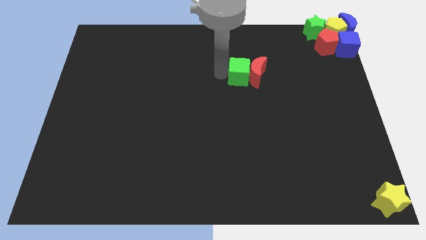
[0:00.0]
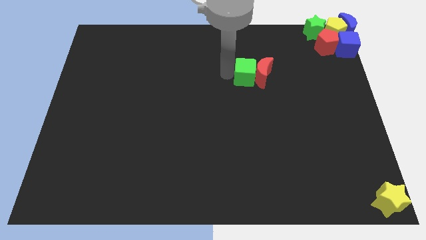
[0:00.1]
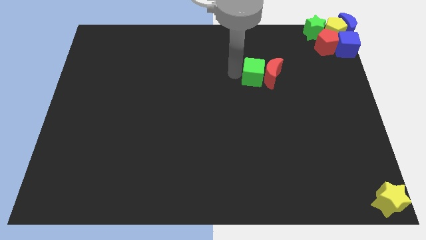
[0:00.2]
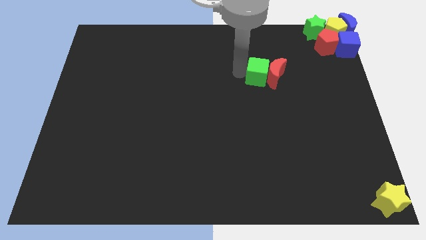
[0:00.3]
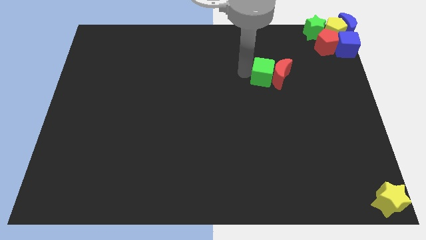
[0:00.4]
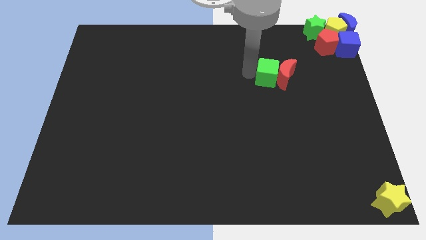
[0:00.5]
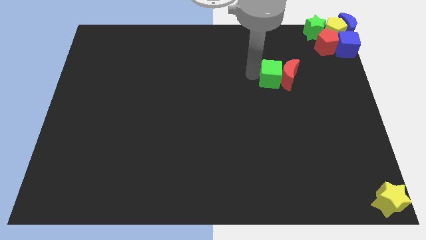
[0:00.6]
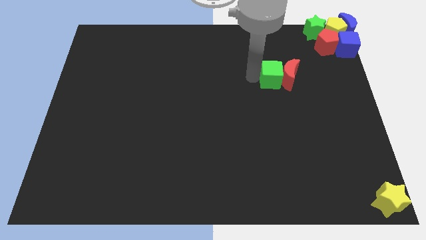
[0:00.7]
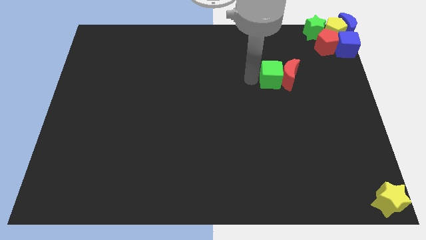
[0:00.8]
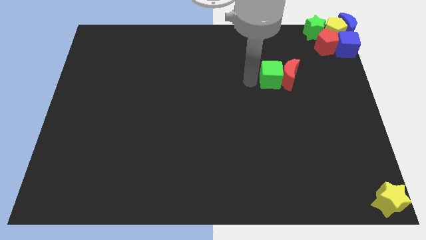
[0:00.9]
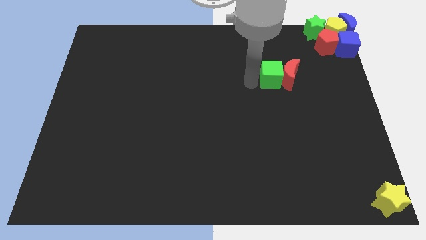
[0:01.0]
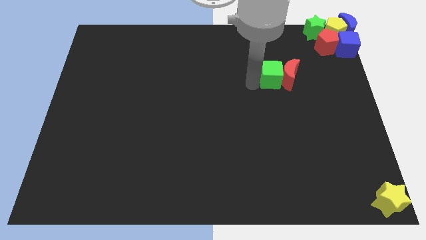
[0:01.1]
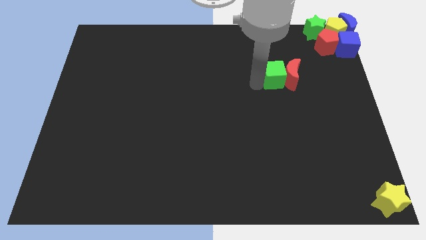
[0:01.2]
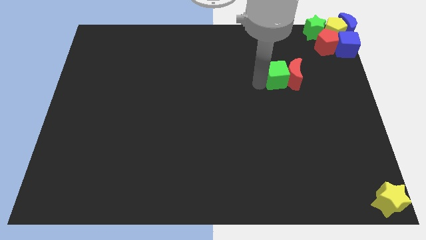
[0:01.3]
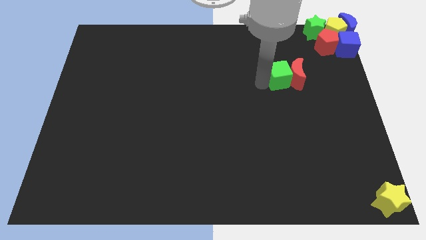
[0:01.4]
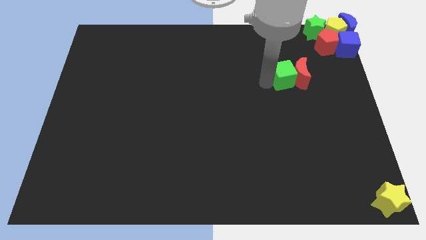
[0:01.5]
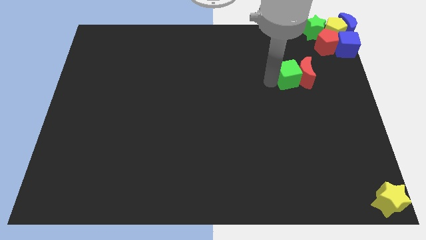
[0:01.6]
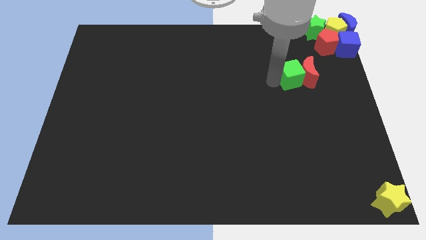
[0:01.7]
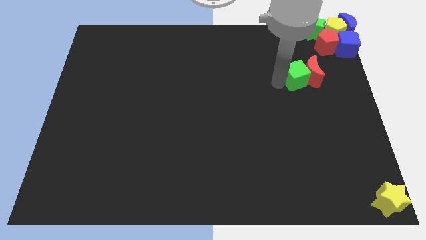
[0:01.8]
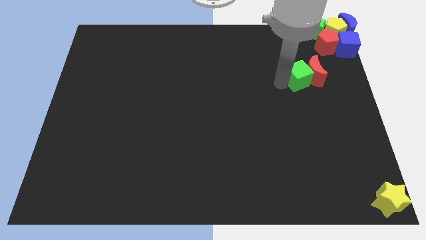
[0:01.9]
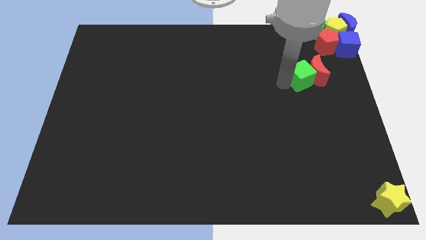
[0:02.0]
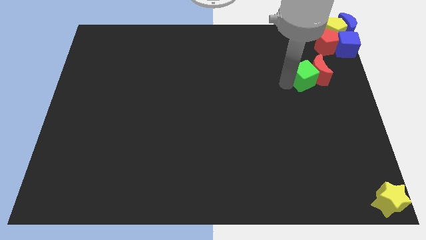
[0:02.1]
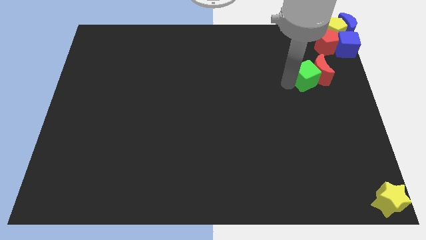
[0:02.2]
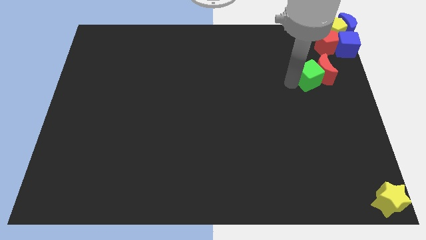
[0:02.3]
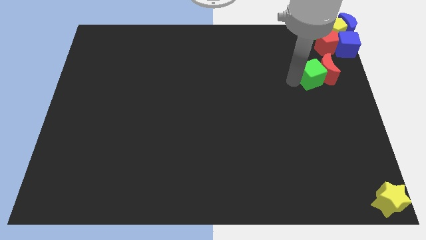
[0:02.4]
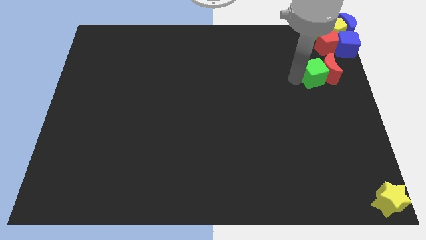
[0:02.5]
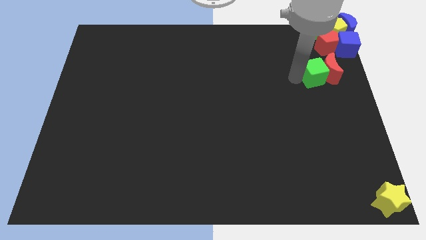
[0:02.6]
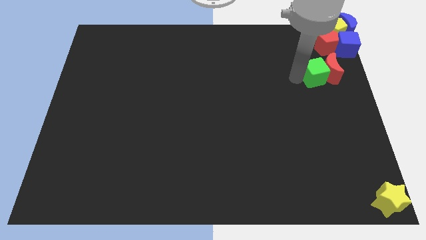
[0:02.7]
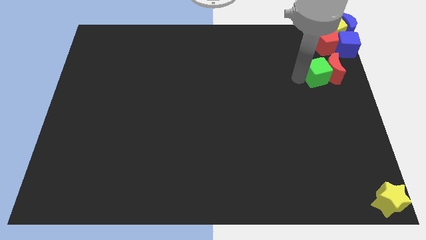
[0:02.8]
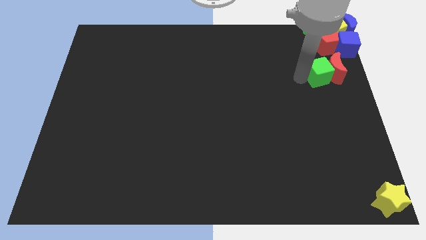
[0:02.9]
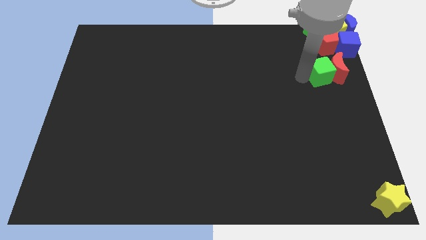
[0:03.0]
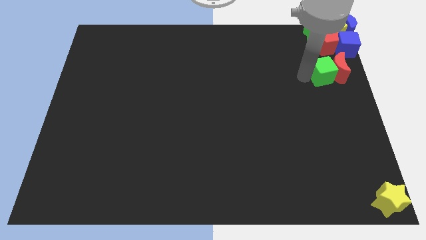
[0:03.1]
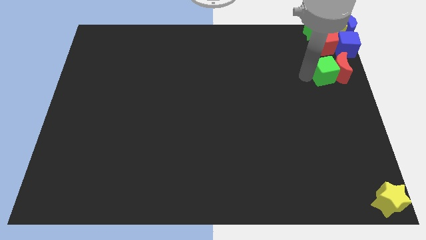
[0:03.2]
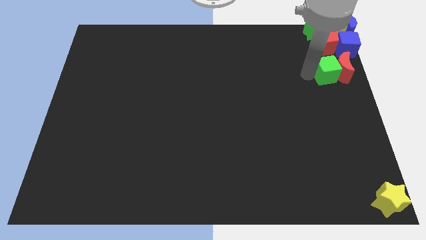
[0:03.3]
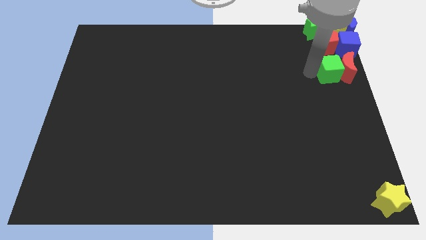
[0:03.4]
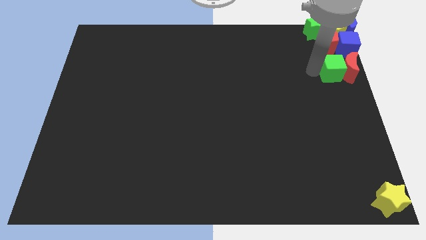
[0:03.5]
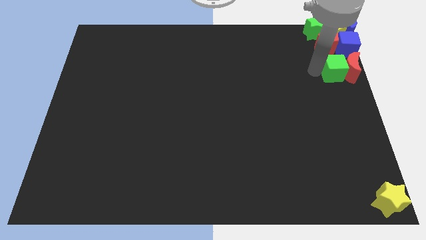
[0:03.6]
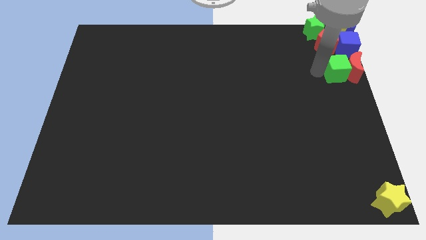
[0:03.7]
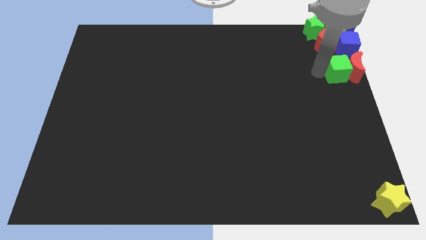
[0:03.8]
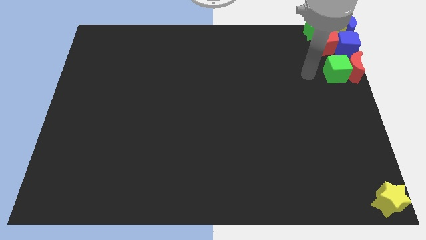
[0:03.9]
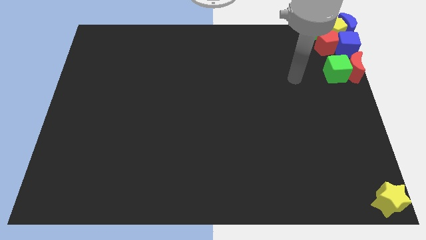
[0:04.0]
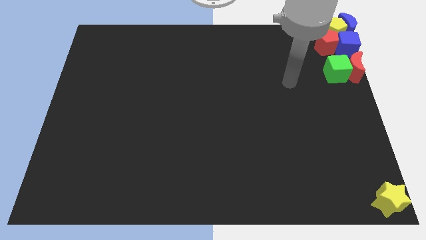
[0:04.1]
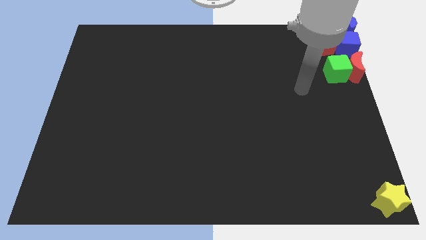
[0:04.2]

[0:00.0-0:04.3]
push the red crescent along with the green cube b to the right side of the board

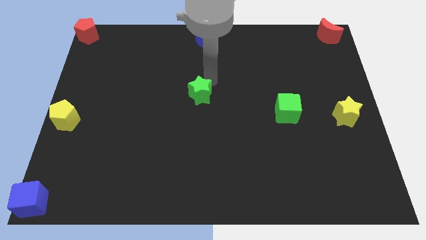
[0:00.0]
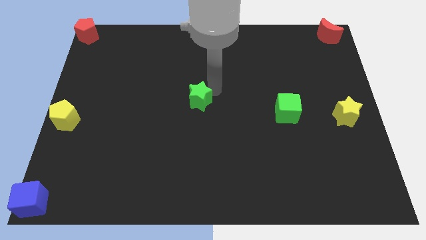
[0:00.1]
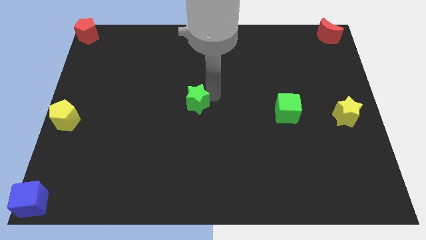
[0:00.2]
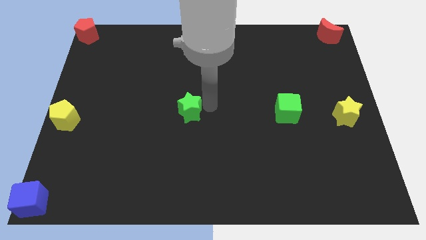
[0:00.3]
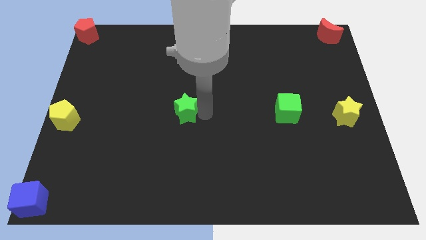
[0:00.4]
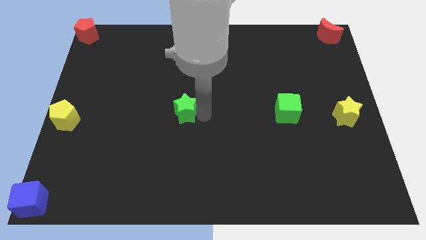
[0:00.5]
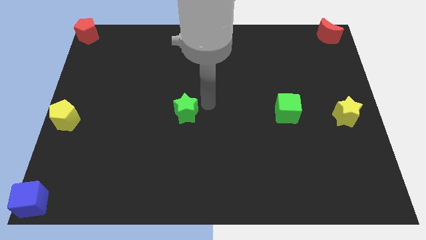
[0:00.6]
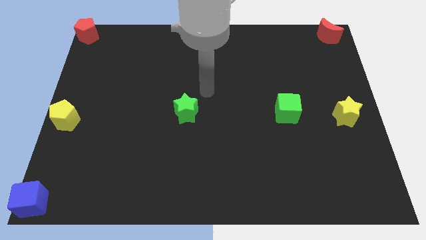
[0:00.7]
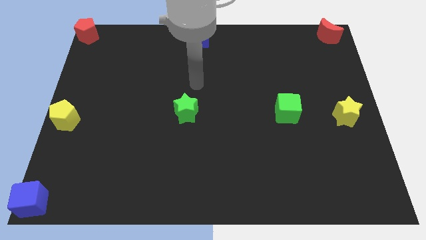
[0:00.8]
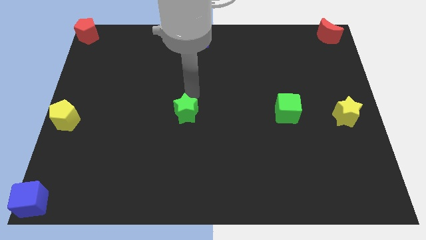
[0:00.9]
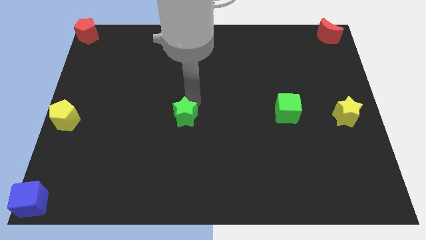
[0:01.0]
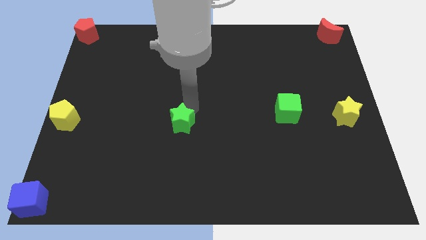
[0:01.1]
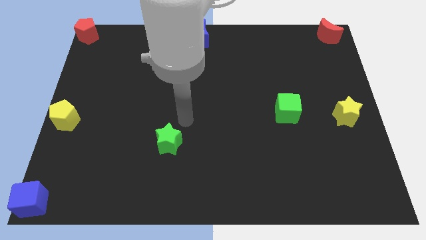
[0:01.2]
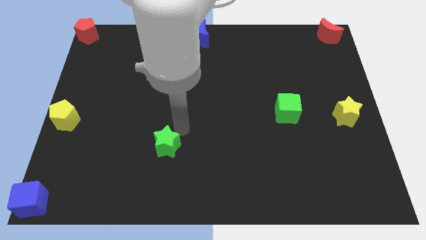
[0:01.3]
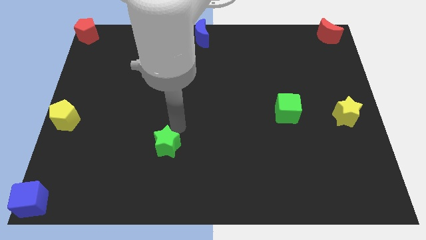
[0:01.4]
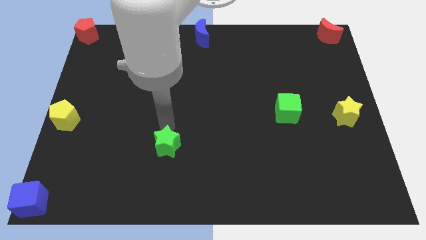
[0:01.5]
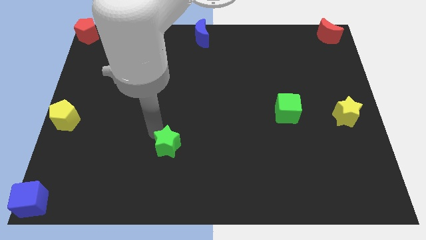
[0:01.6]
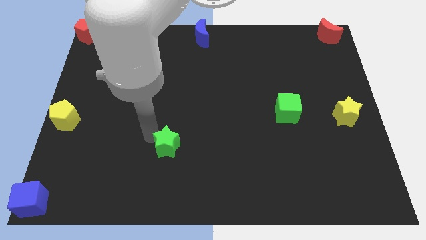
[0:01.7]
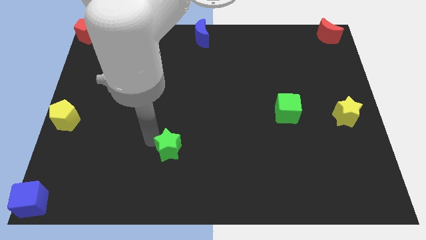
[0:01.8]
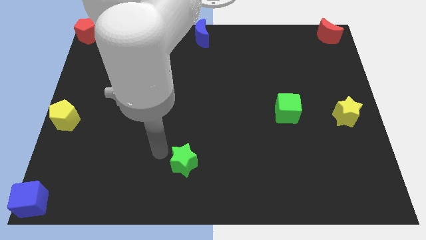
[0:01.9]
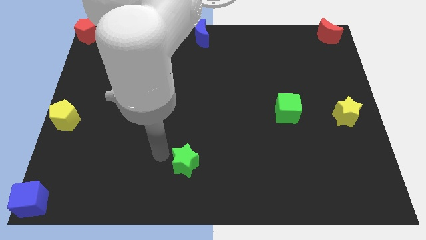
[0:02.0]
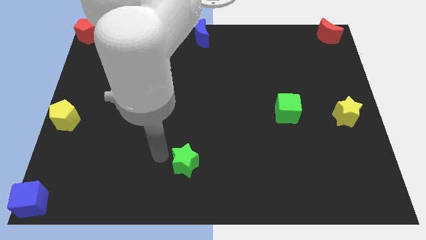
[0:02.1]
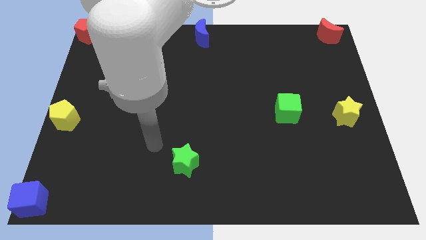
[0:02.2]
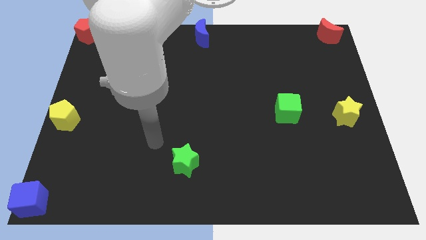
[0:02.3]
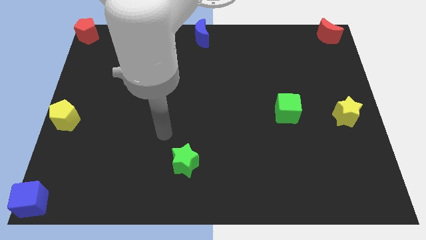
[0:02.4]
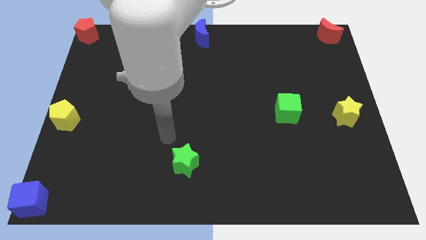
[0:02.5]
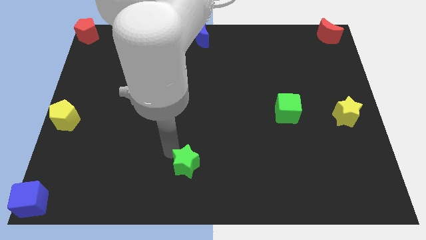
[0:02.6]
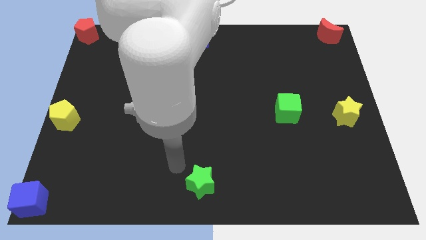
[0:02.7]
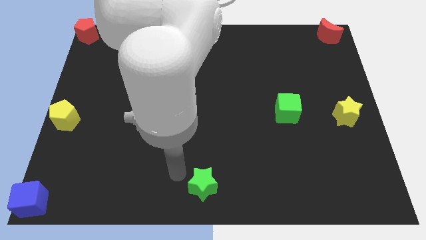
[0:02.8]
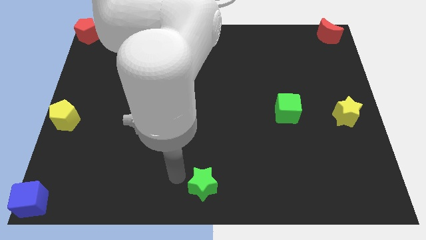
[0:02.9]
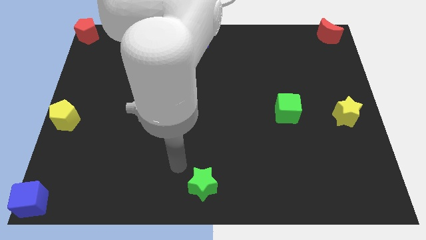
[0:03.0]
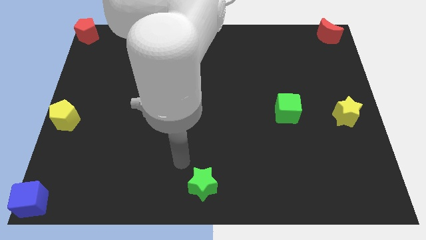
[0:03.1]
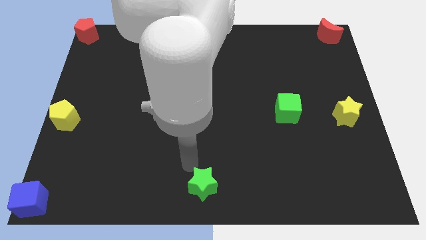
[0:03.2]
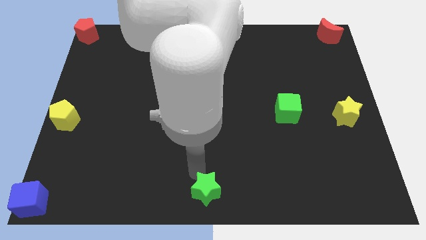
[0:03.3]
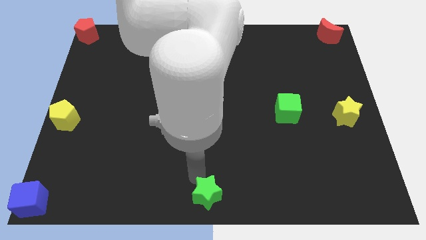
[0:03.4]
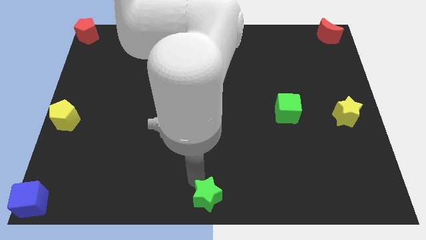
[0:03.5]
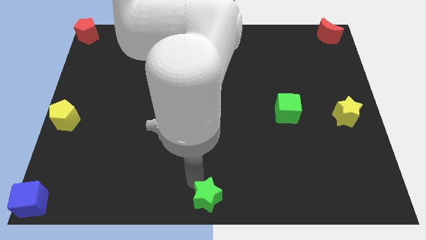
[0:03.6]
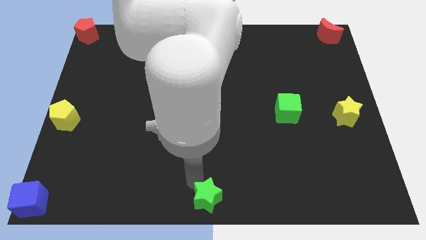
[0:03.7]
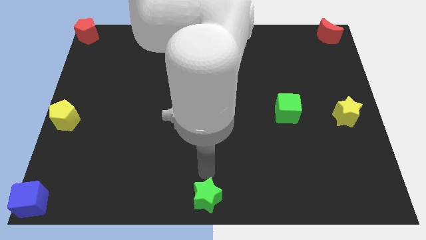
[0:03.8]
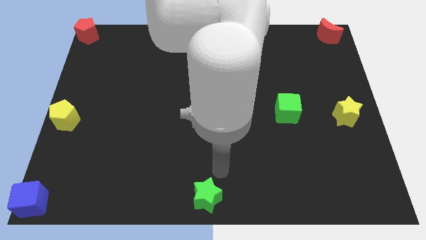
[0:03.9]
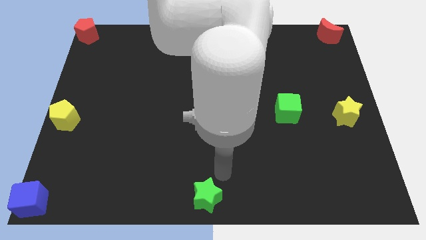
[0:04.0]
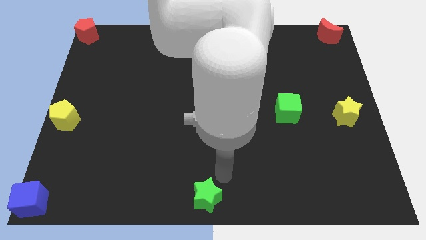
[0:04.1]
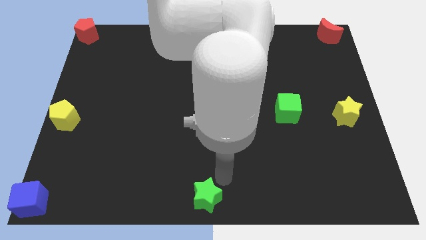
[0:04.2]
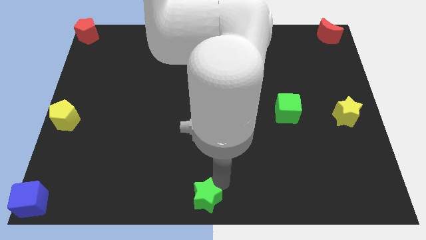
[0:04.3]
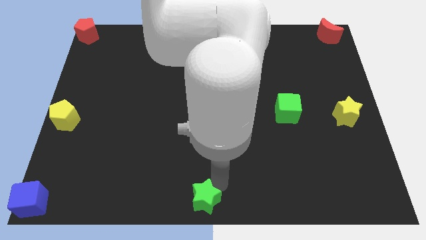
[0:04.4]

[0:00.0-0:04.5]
place the green star at the bottom center of the board
